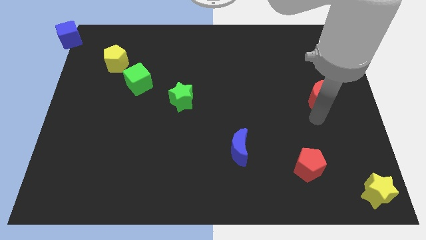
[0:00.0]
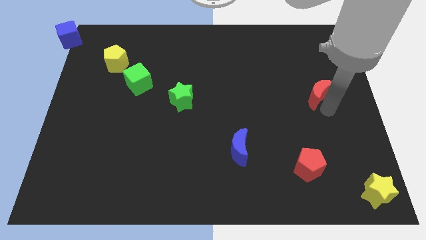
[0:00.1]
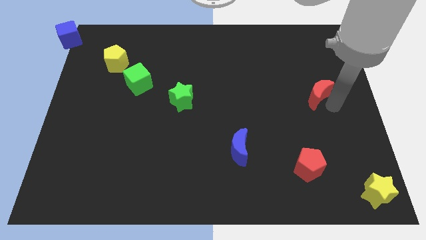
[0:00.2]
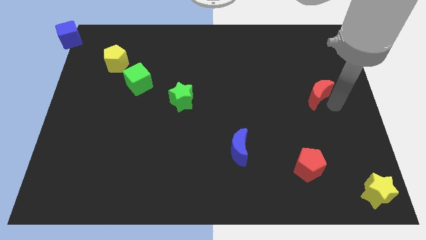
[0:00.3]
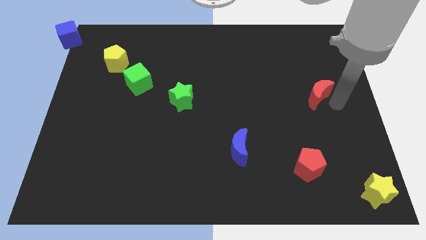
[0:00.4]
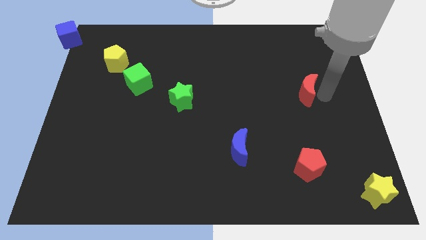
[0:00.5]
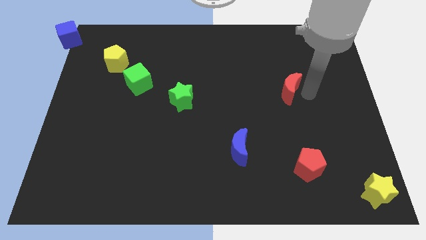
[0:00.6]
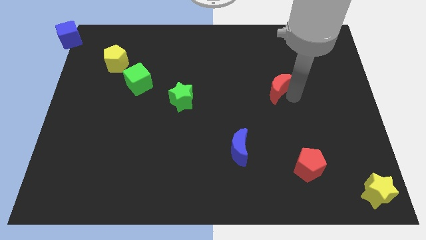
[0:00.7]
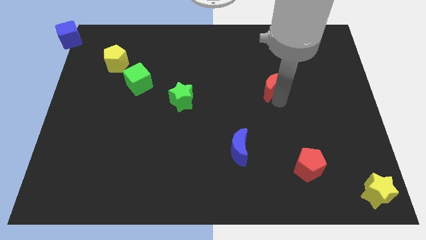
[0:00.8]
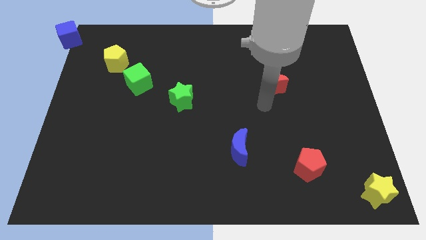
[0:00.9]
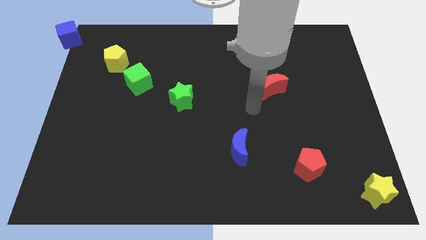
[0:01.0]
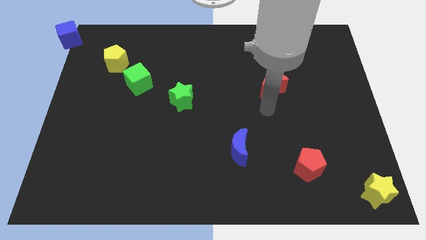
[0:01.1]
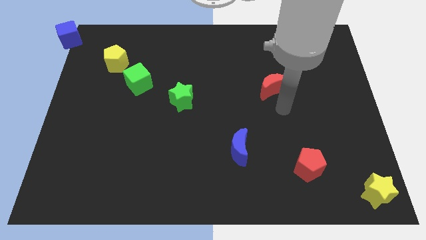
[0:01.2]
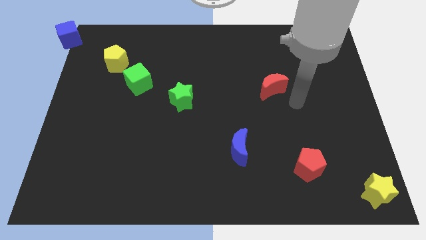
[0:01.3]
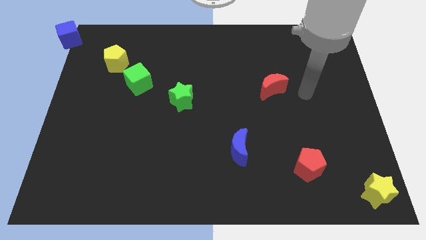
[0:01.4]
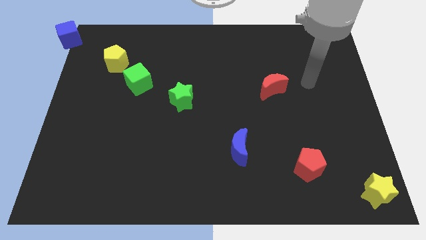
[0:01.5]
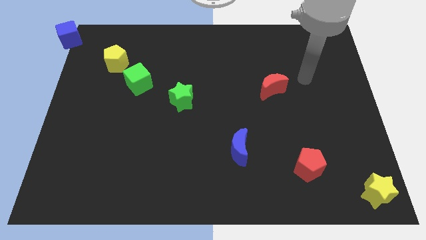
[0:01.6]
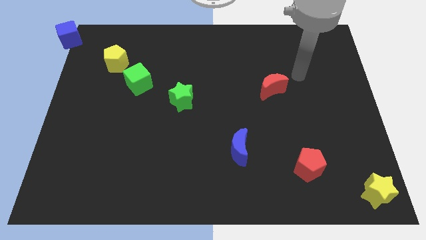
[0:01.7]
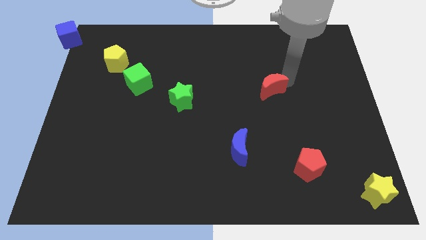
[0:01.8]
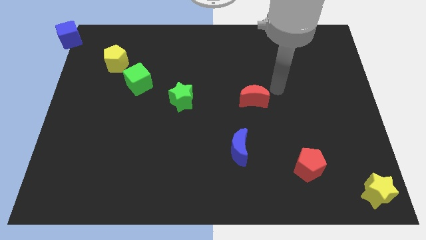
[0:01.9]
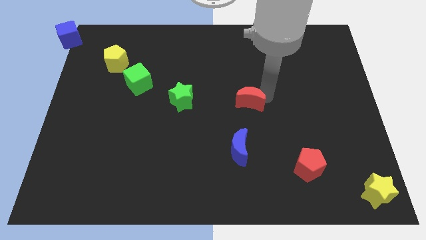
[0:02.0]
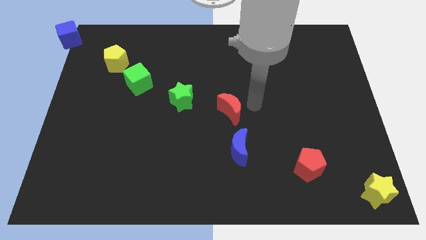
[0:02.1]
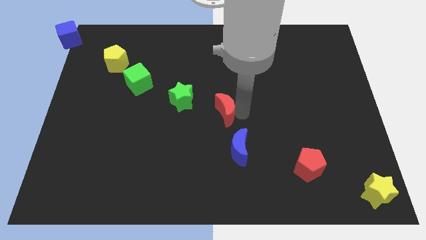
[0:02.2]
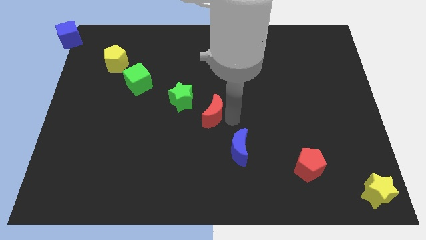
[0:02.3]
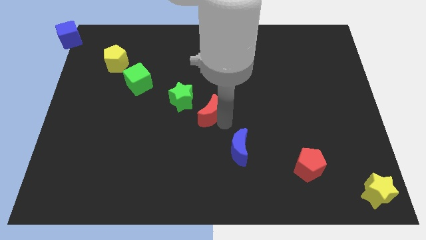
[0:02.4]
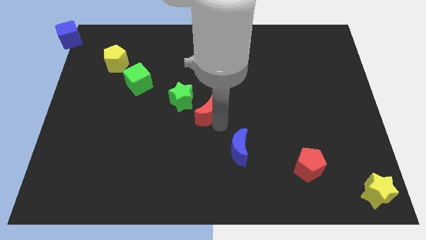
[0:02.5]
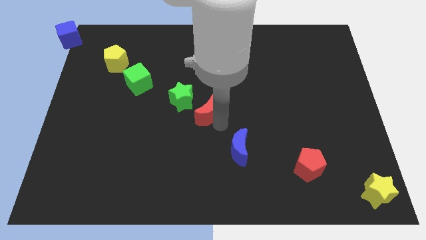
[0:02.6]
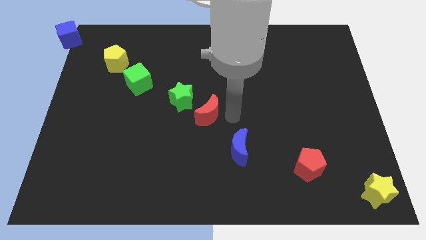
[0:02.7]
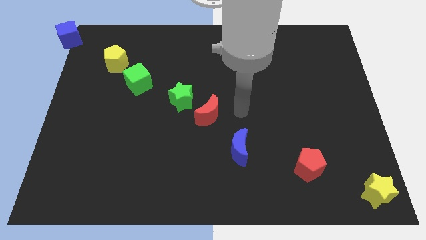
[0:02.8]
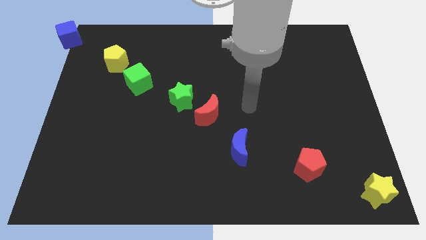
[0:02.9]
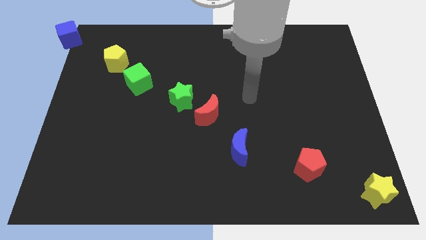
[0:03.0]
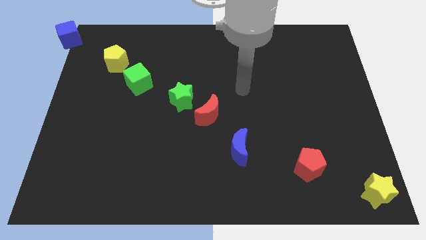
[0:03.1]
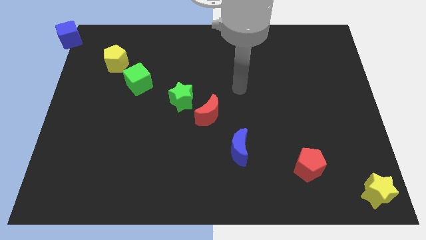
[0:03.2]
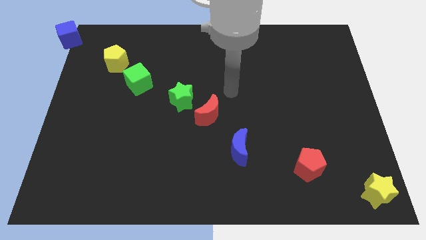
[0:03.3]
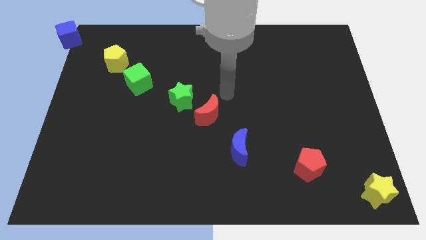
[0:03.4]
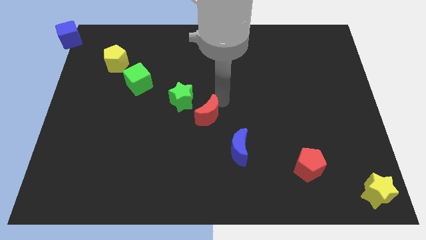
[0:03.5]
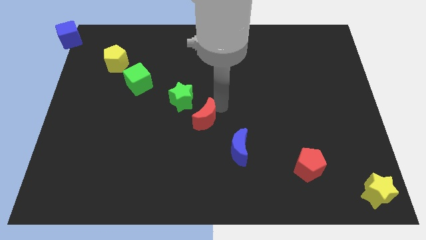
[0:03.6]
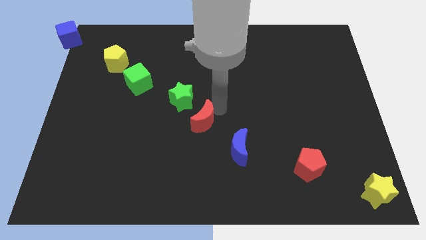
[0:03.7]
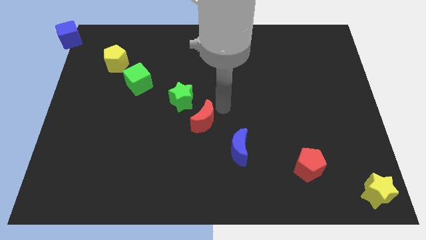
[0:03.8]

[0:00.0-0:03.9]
move the red crescent in between the green star and blue crescent

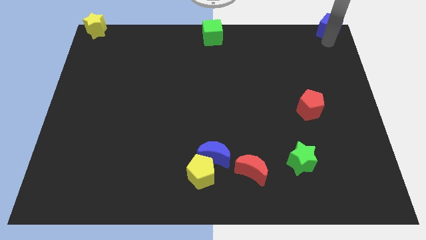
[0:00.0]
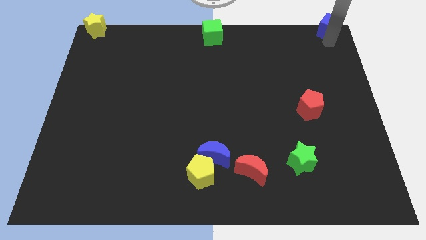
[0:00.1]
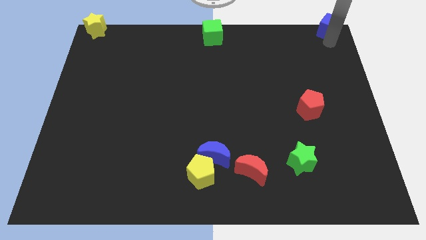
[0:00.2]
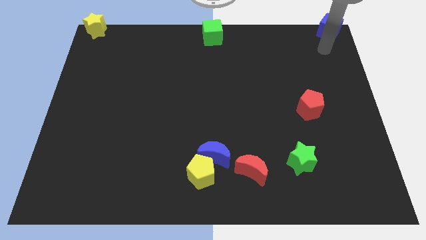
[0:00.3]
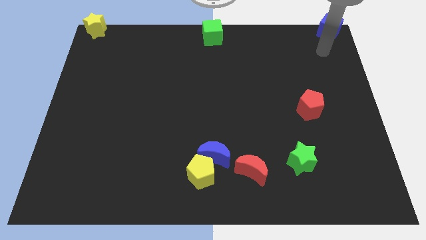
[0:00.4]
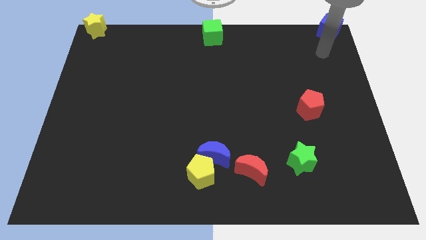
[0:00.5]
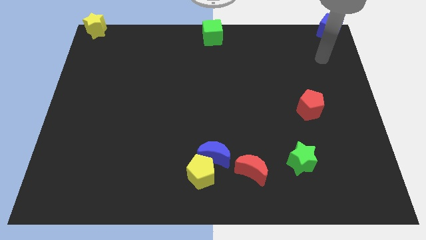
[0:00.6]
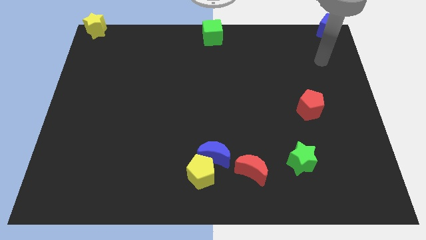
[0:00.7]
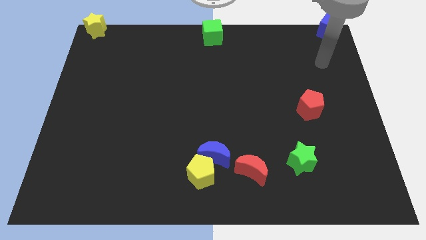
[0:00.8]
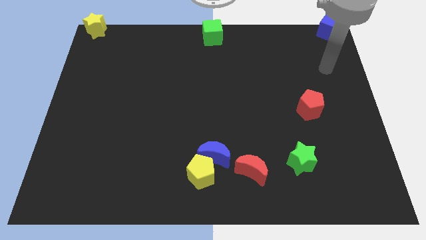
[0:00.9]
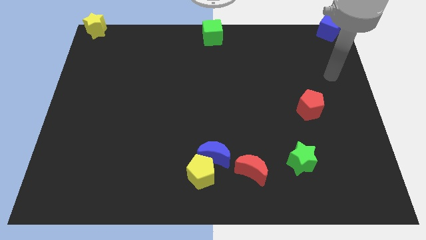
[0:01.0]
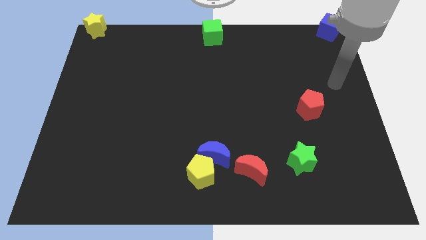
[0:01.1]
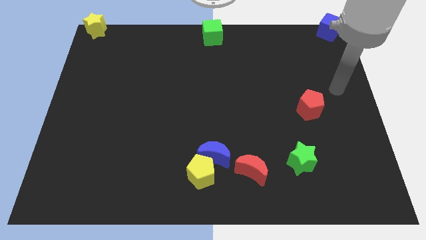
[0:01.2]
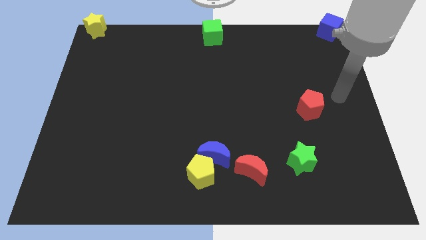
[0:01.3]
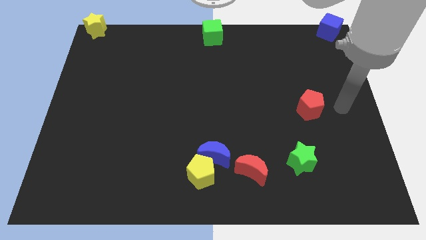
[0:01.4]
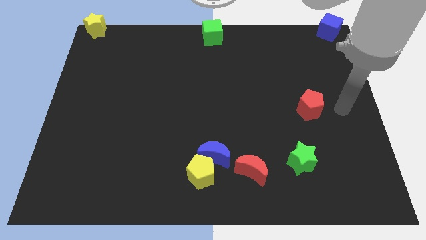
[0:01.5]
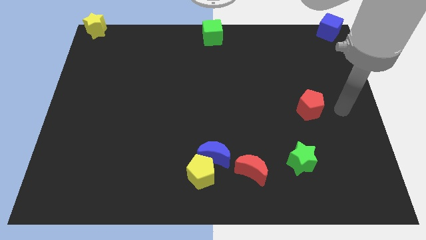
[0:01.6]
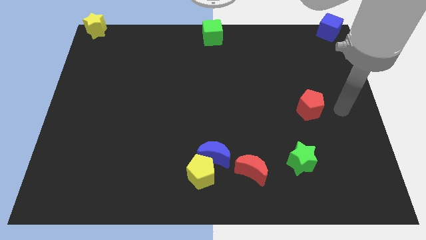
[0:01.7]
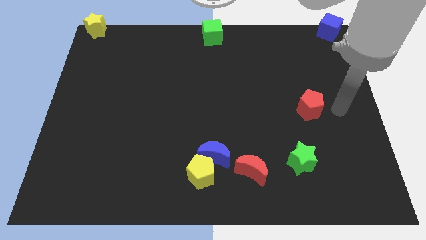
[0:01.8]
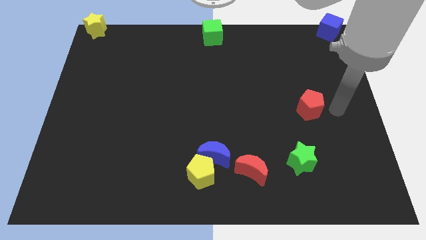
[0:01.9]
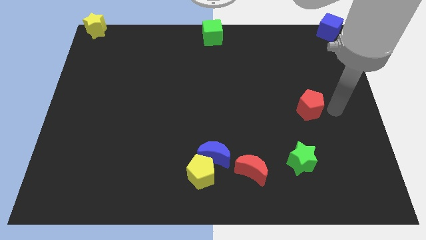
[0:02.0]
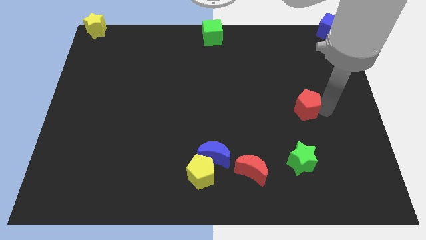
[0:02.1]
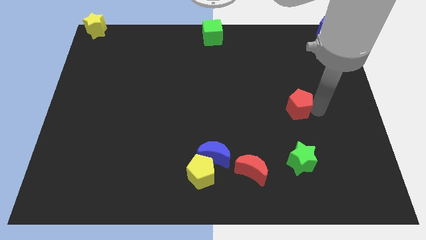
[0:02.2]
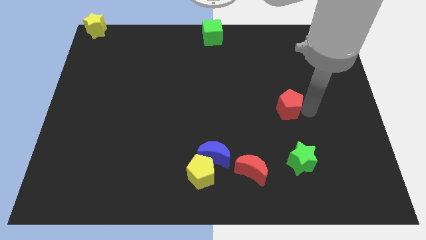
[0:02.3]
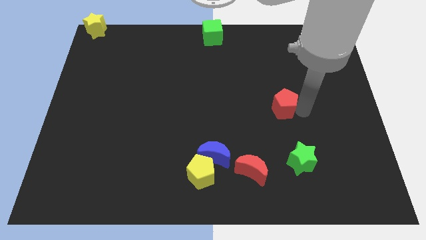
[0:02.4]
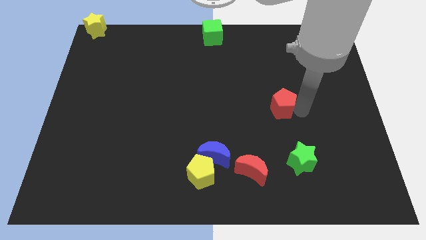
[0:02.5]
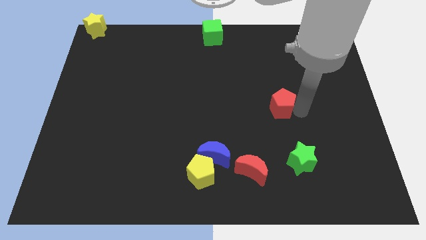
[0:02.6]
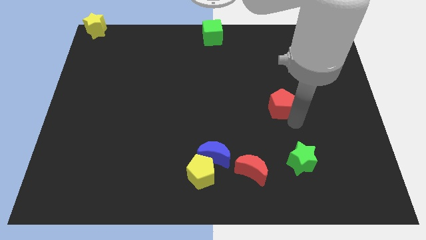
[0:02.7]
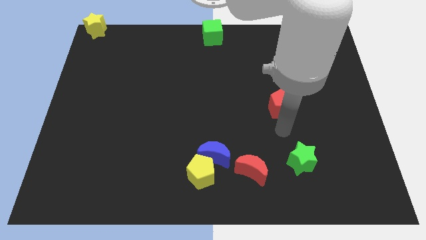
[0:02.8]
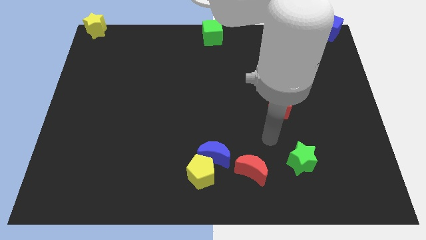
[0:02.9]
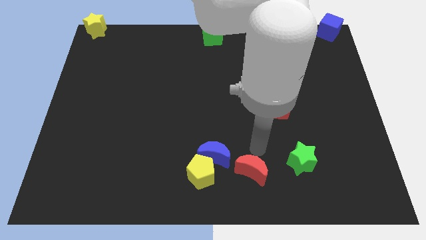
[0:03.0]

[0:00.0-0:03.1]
slide the red pentagon slightly to the left

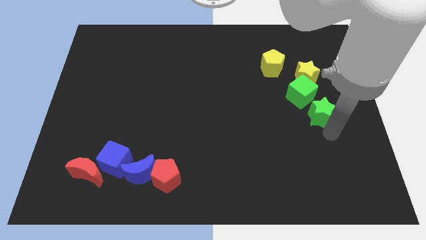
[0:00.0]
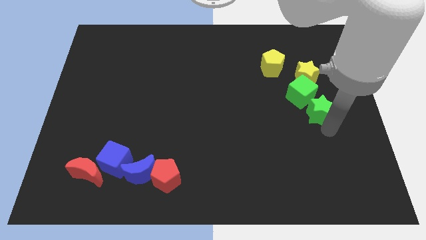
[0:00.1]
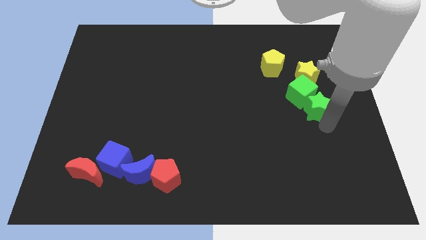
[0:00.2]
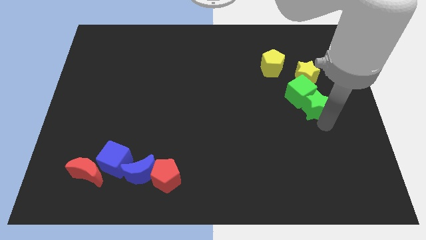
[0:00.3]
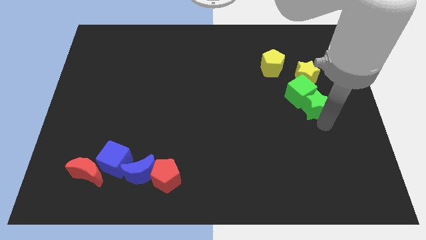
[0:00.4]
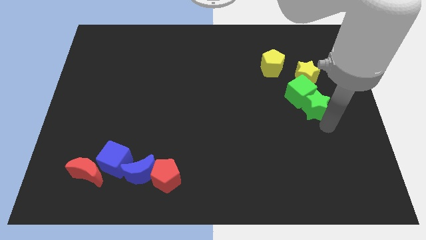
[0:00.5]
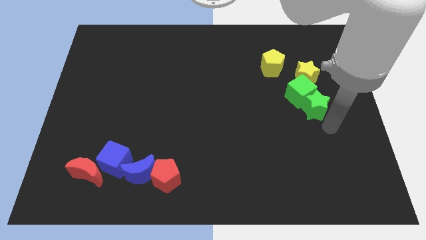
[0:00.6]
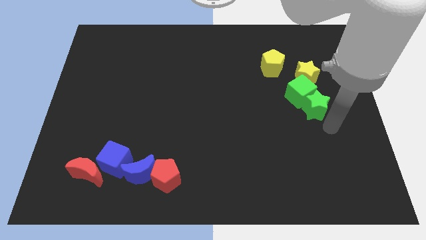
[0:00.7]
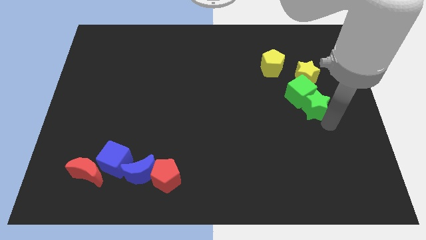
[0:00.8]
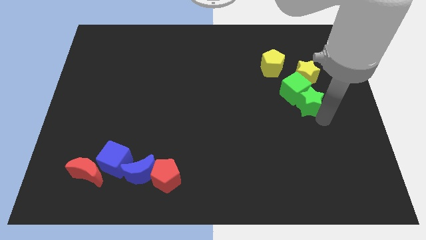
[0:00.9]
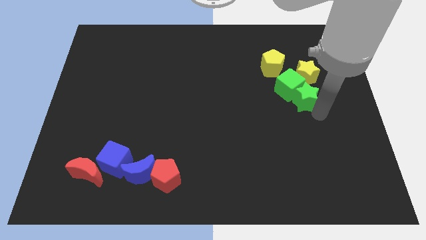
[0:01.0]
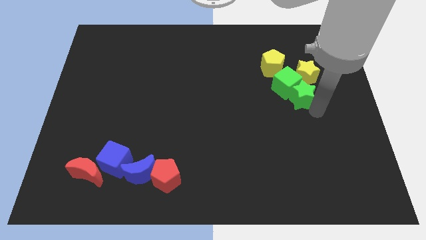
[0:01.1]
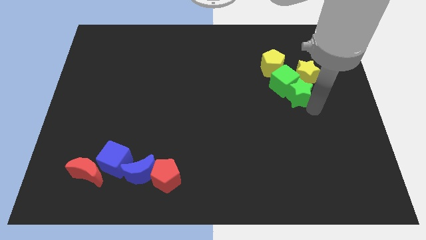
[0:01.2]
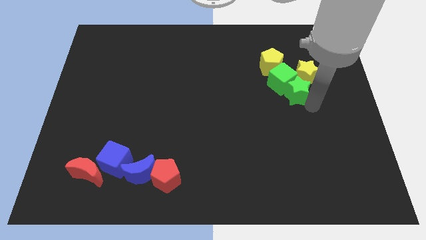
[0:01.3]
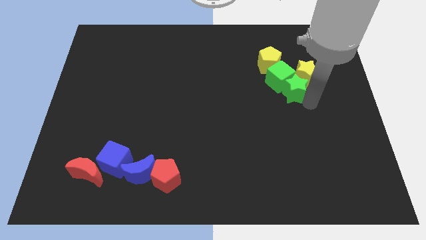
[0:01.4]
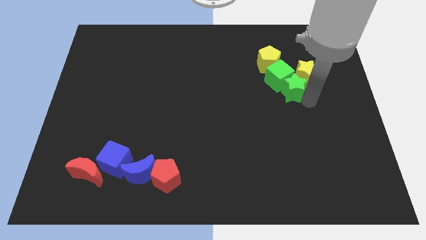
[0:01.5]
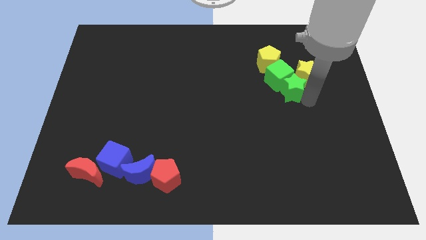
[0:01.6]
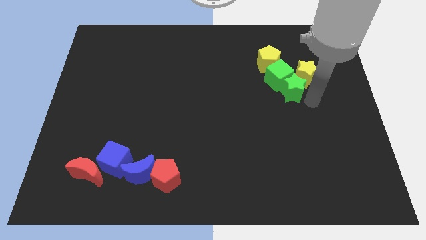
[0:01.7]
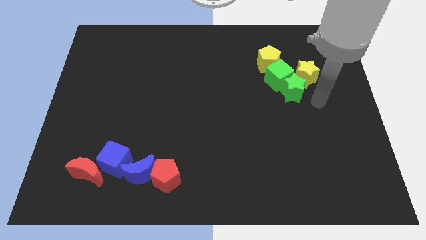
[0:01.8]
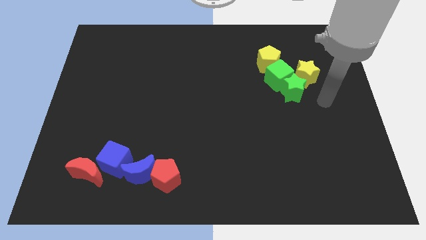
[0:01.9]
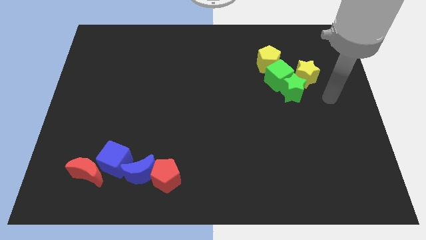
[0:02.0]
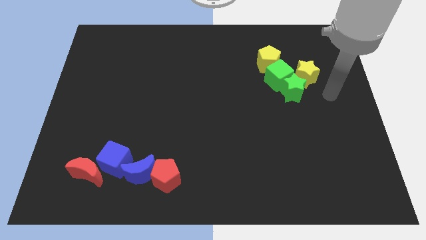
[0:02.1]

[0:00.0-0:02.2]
push the green star green cube yellow pentagon towards top
